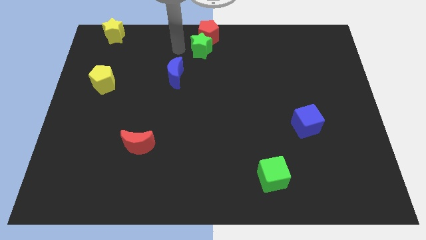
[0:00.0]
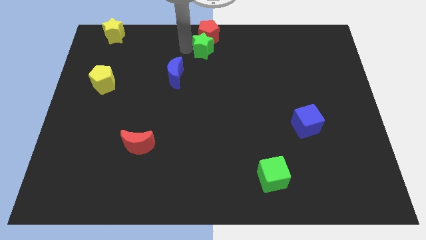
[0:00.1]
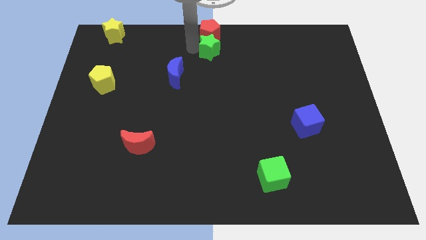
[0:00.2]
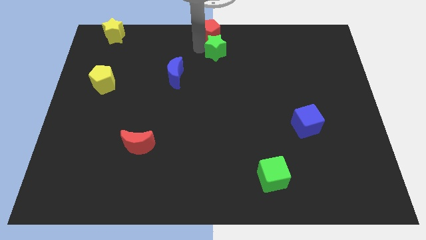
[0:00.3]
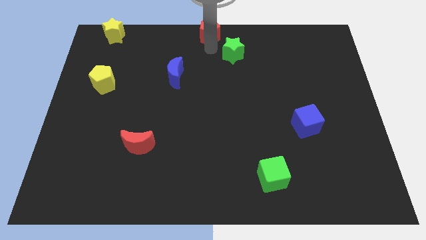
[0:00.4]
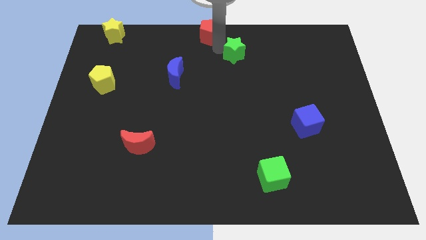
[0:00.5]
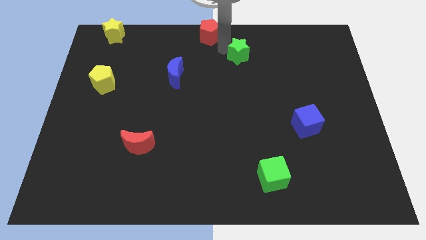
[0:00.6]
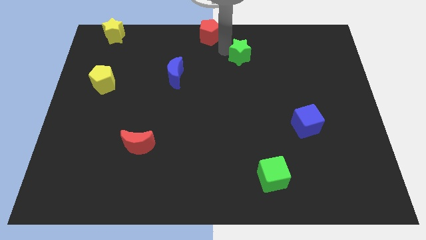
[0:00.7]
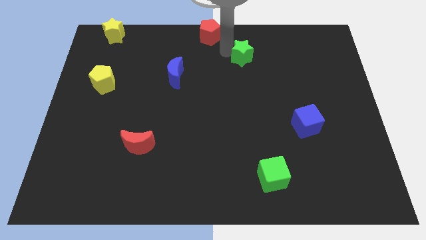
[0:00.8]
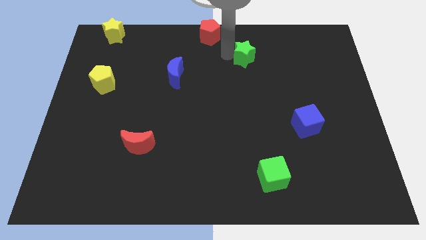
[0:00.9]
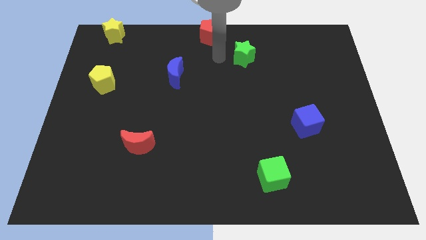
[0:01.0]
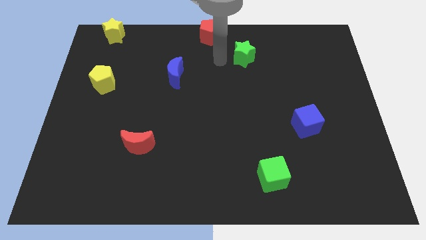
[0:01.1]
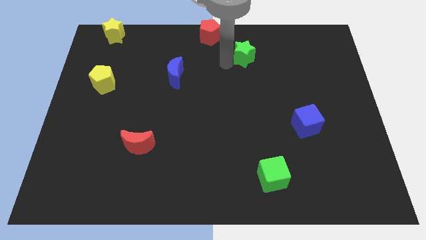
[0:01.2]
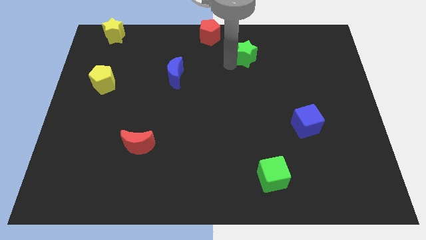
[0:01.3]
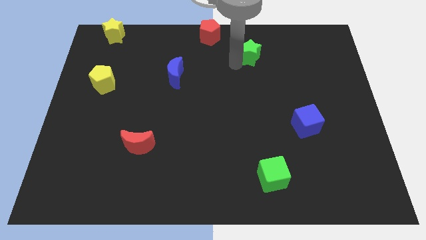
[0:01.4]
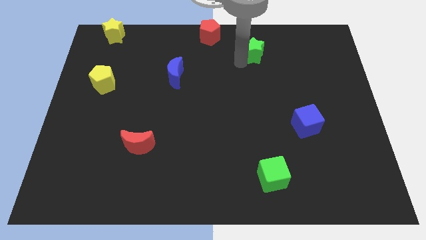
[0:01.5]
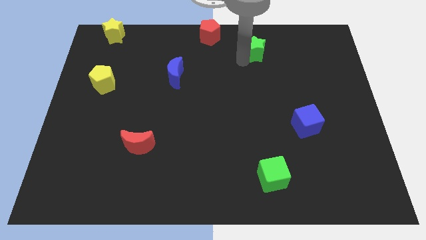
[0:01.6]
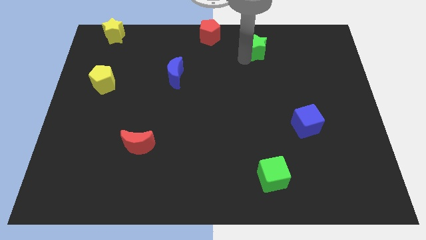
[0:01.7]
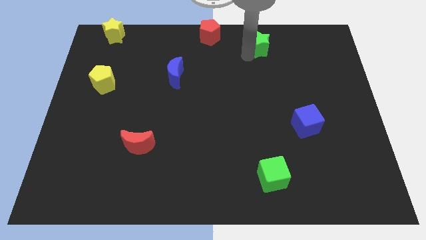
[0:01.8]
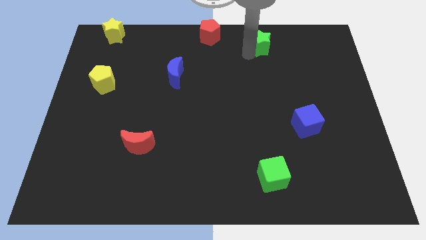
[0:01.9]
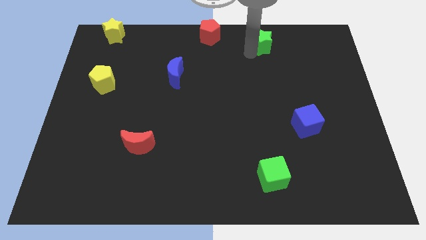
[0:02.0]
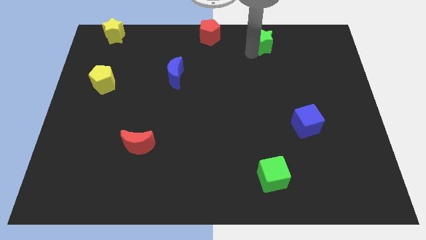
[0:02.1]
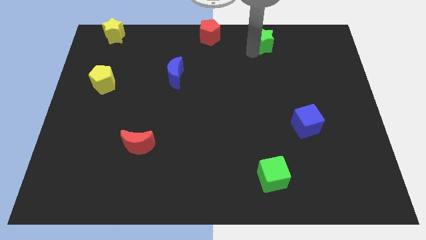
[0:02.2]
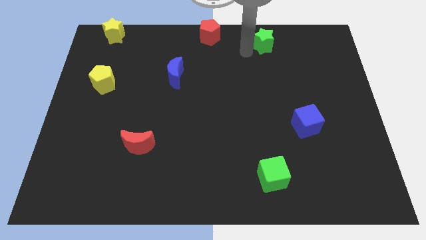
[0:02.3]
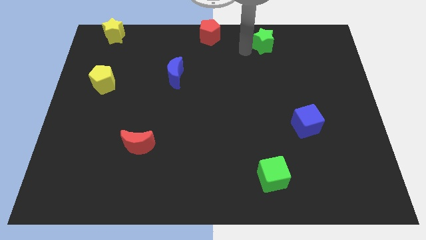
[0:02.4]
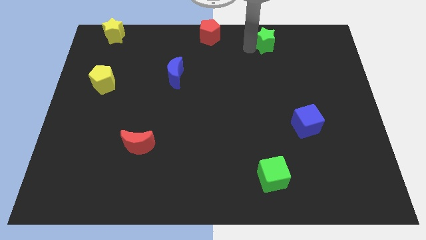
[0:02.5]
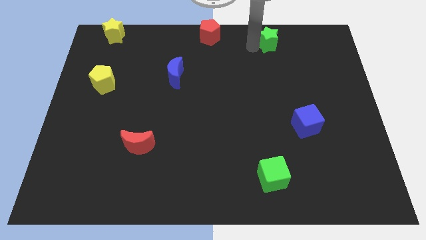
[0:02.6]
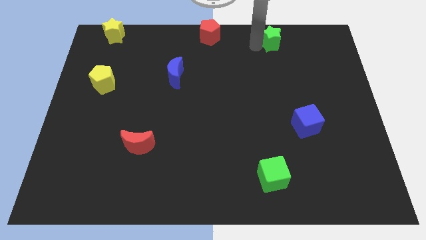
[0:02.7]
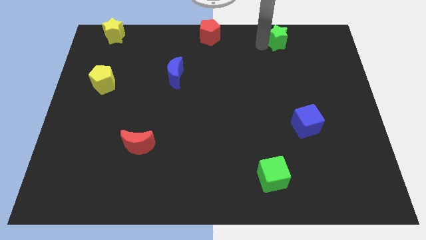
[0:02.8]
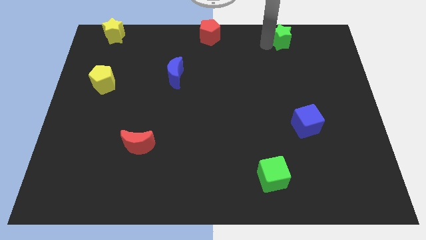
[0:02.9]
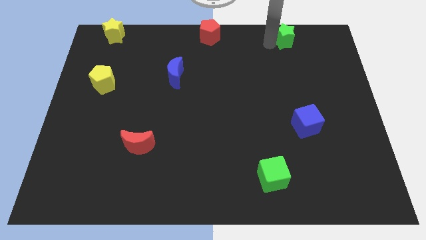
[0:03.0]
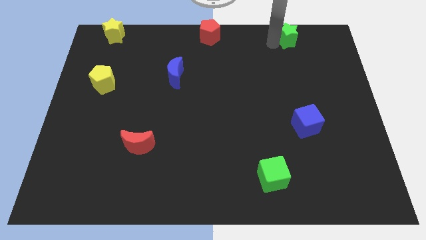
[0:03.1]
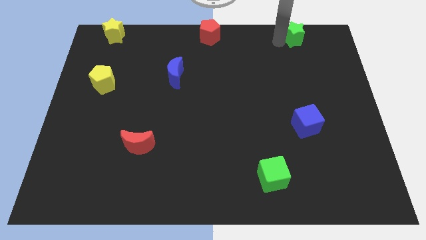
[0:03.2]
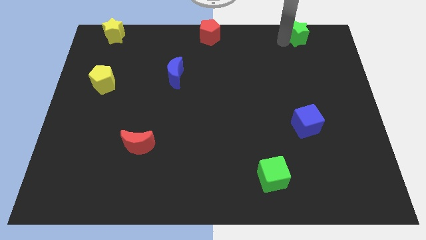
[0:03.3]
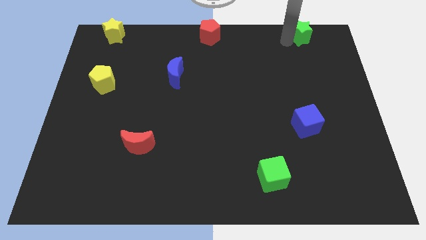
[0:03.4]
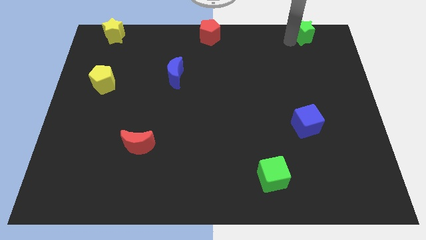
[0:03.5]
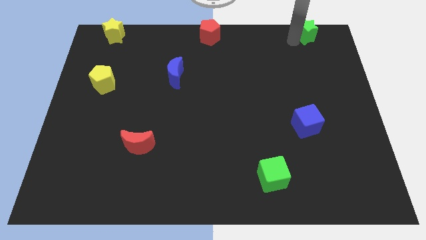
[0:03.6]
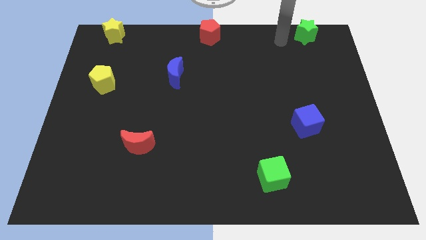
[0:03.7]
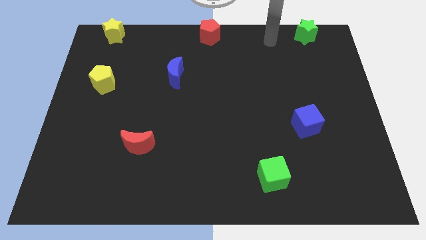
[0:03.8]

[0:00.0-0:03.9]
place the green star horizontally to the right side of the red pentagon

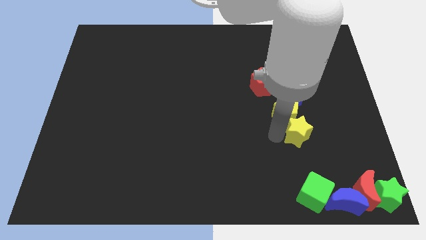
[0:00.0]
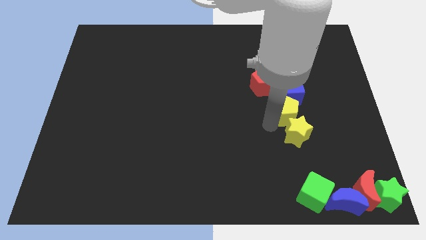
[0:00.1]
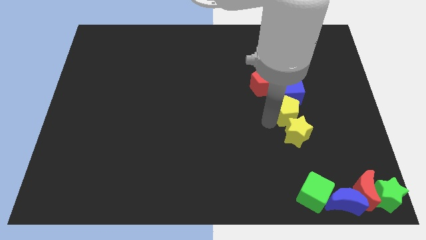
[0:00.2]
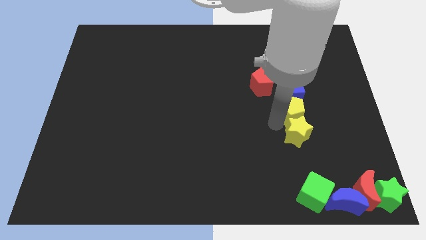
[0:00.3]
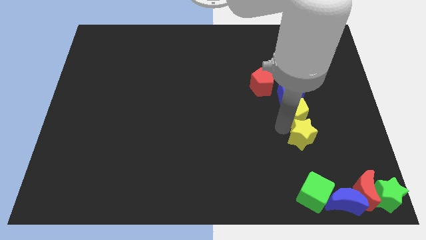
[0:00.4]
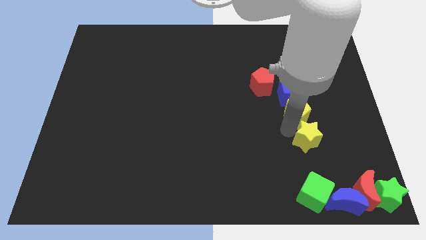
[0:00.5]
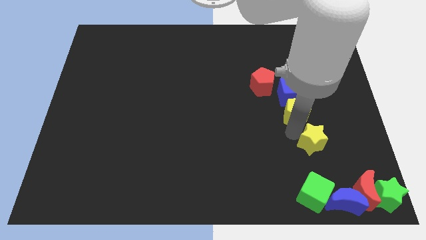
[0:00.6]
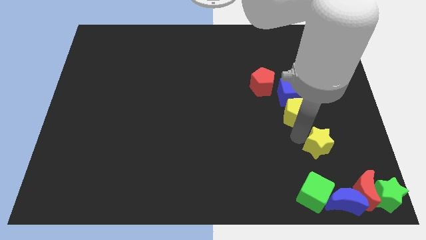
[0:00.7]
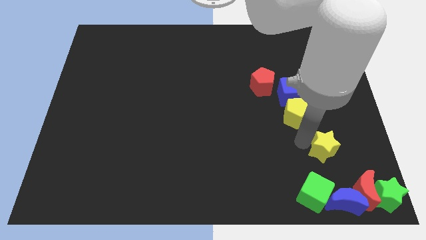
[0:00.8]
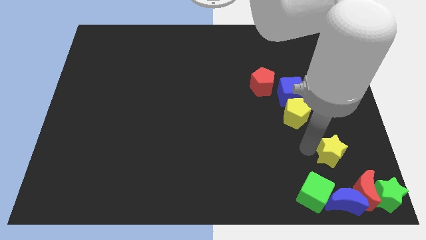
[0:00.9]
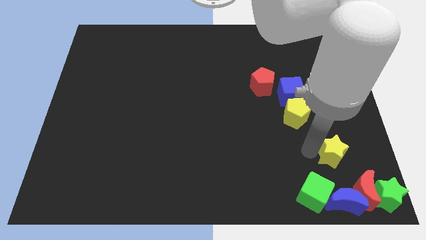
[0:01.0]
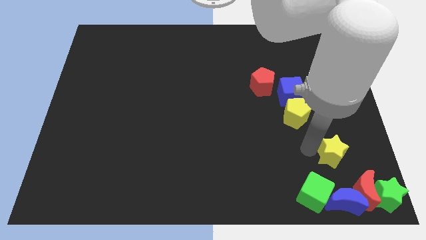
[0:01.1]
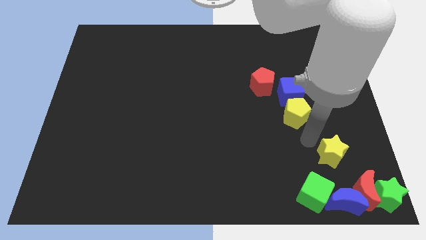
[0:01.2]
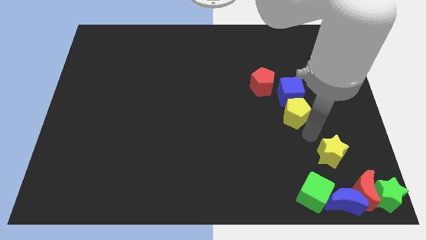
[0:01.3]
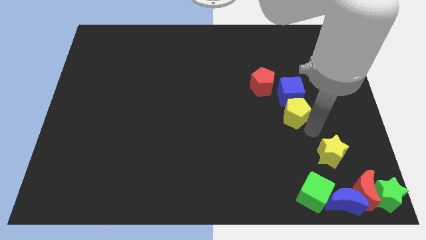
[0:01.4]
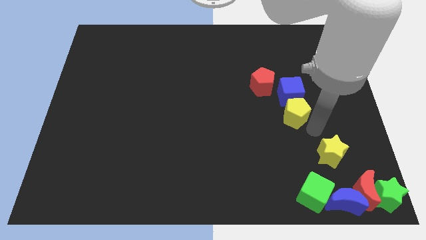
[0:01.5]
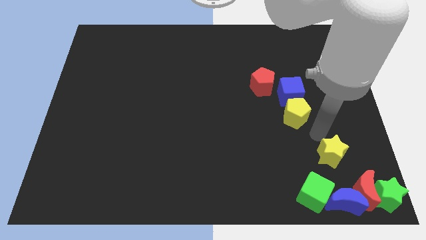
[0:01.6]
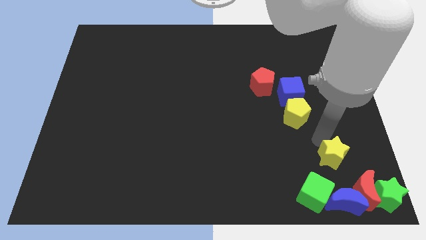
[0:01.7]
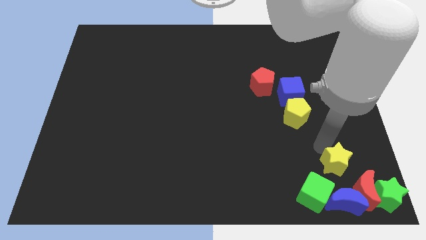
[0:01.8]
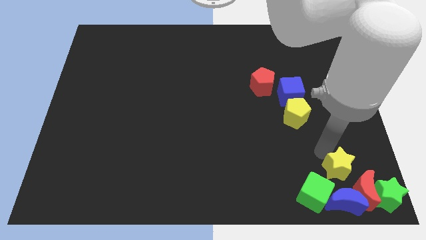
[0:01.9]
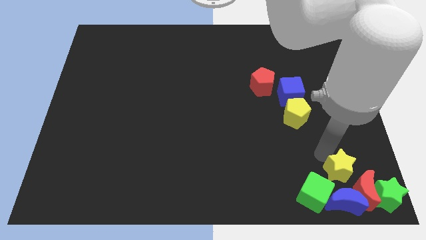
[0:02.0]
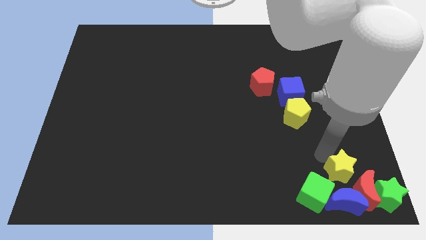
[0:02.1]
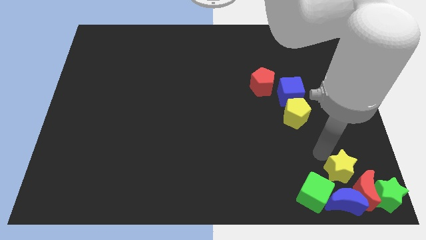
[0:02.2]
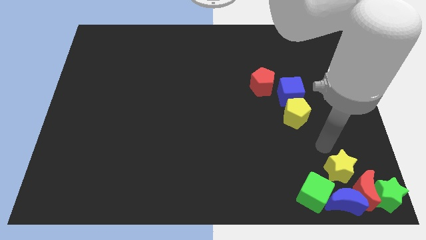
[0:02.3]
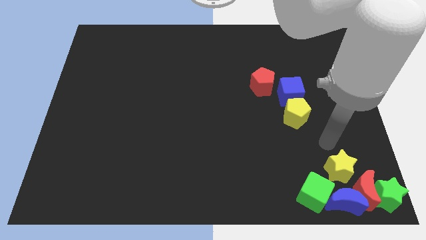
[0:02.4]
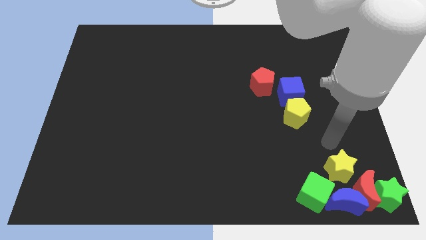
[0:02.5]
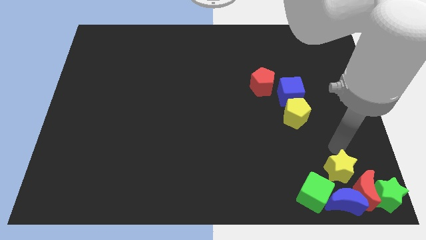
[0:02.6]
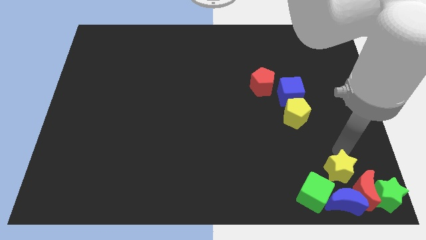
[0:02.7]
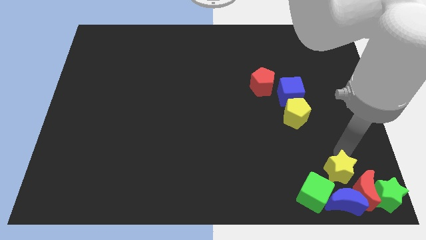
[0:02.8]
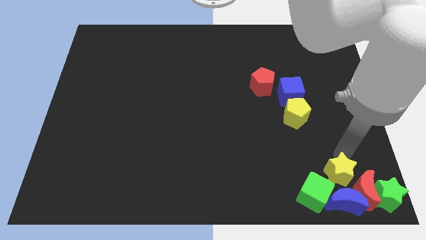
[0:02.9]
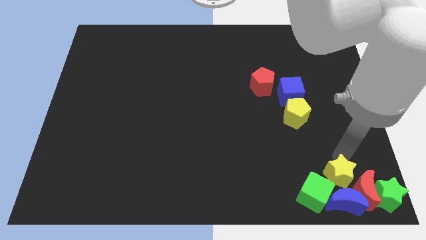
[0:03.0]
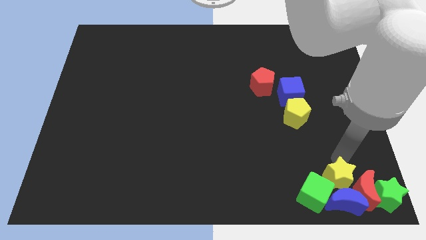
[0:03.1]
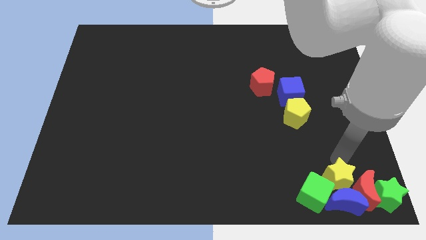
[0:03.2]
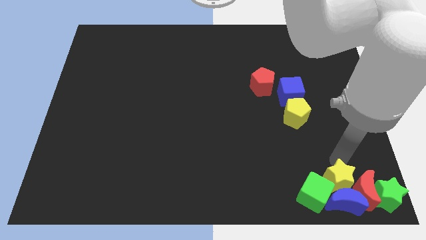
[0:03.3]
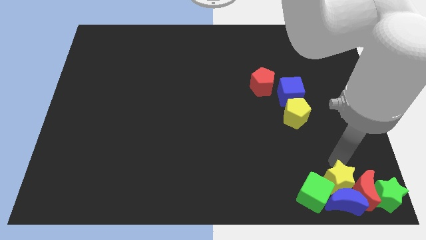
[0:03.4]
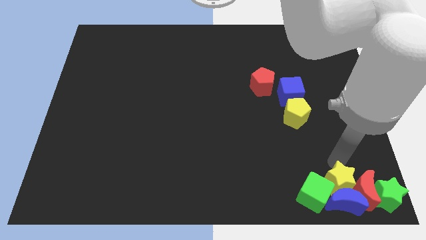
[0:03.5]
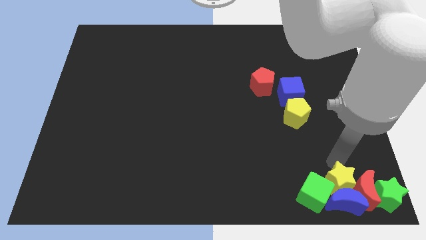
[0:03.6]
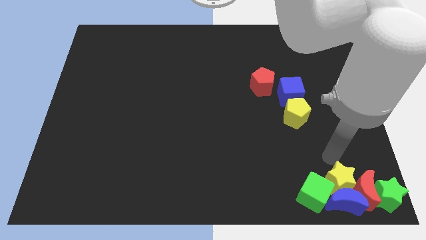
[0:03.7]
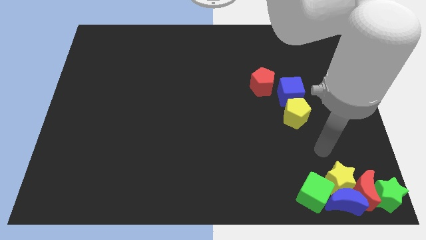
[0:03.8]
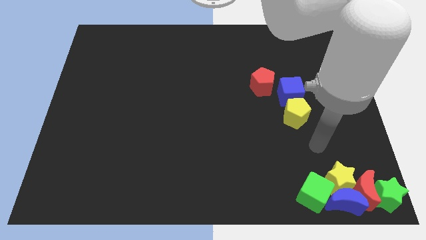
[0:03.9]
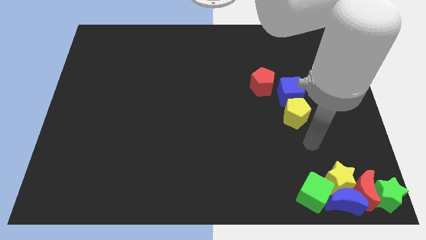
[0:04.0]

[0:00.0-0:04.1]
place the yellow star above the blue crescent

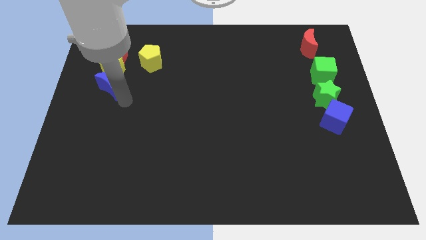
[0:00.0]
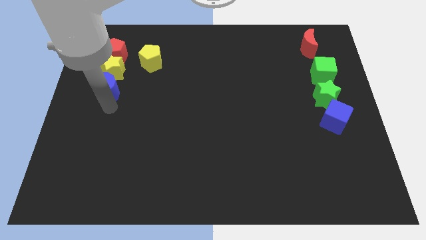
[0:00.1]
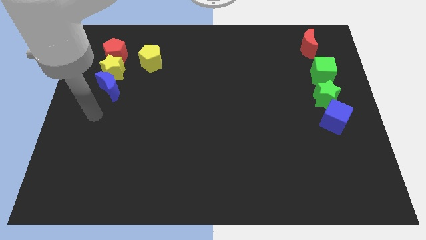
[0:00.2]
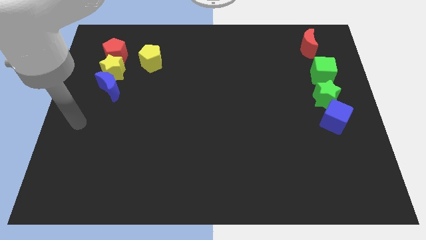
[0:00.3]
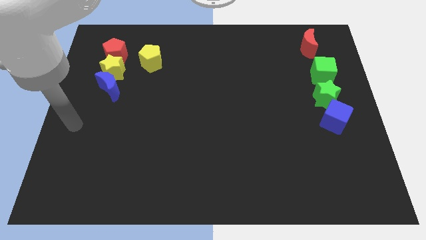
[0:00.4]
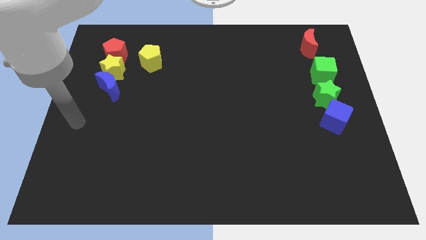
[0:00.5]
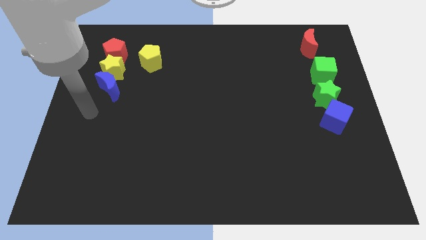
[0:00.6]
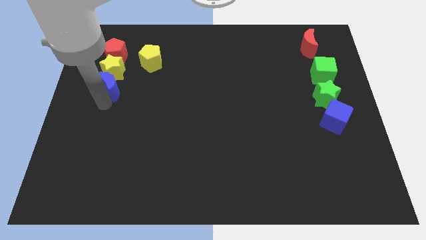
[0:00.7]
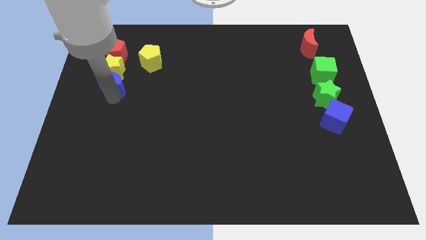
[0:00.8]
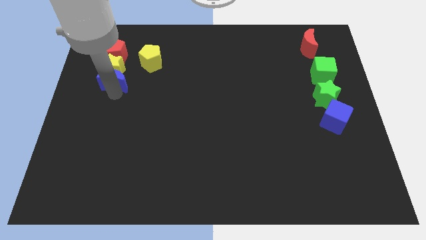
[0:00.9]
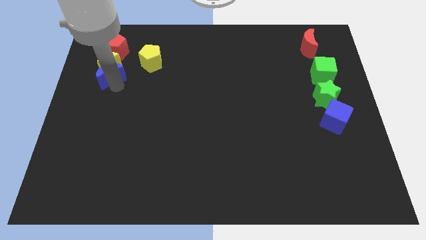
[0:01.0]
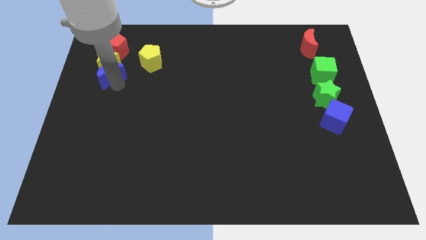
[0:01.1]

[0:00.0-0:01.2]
push blue moon into yellow star
